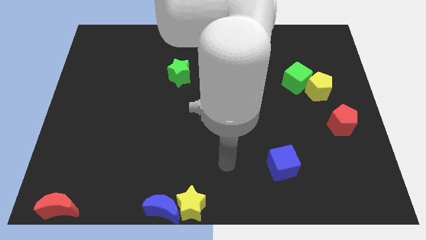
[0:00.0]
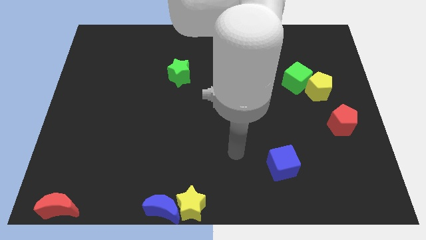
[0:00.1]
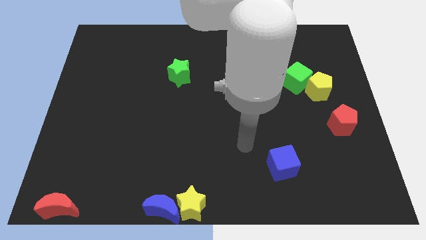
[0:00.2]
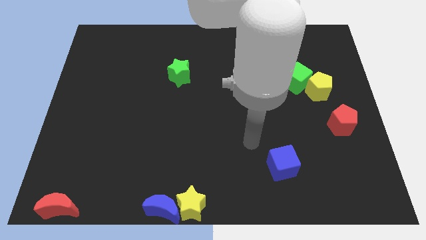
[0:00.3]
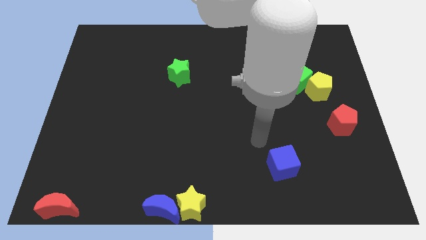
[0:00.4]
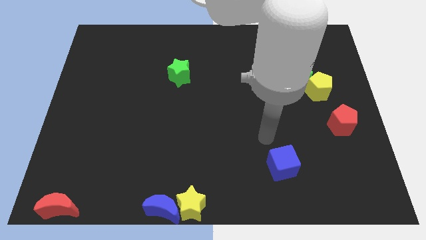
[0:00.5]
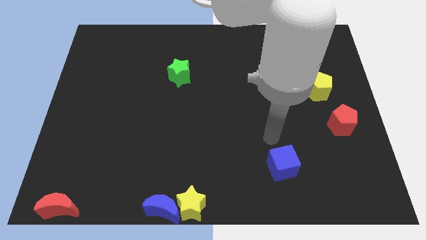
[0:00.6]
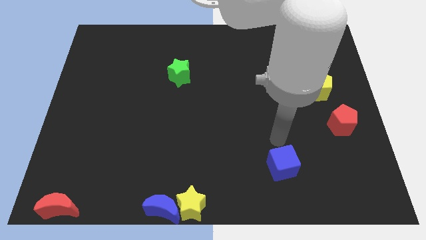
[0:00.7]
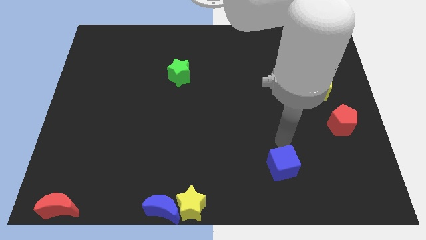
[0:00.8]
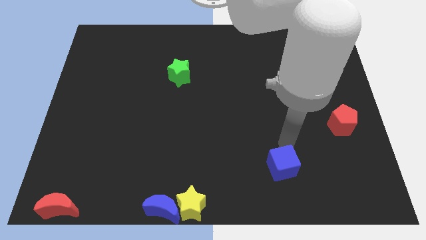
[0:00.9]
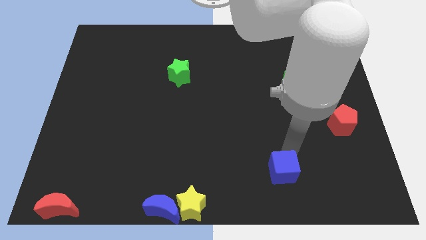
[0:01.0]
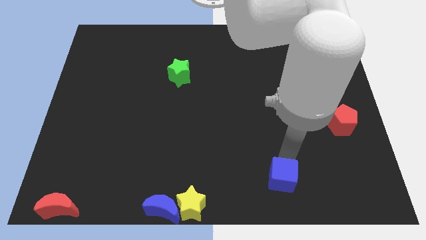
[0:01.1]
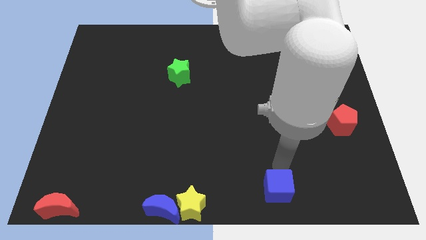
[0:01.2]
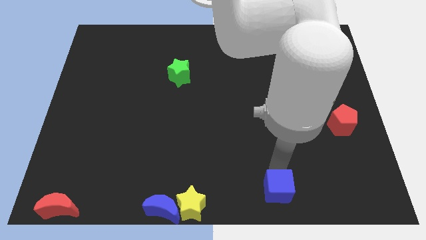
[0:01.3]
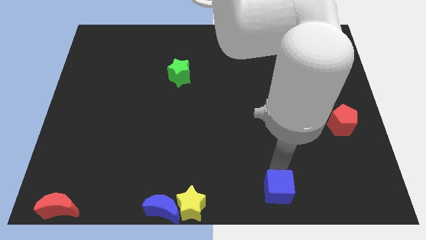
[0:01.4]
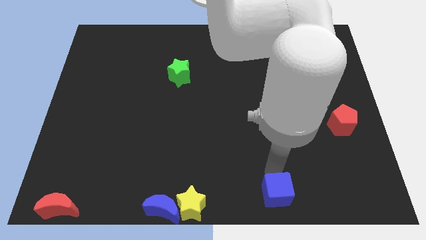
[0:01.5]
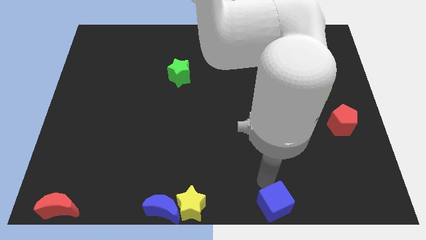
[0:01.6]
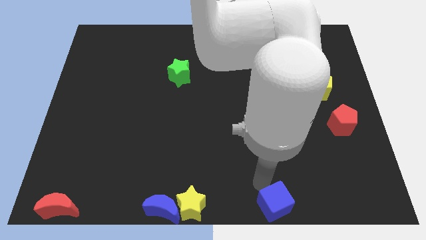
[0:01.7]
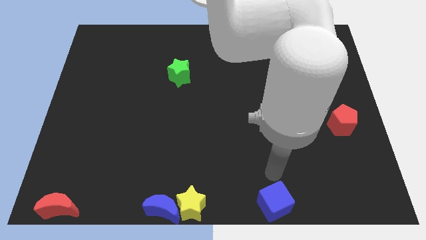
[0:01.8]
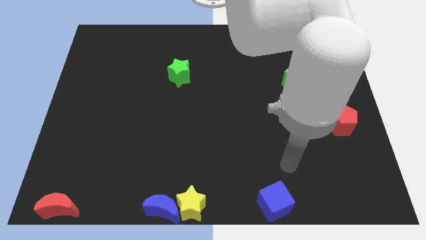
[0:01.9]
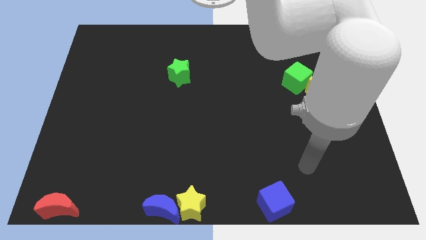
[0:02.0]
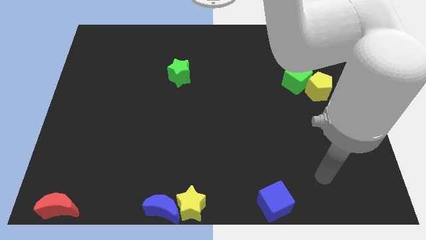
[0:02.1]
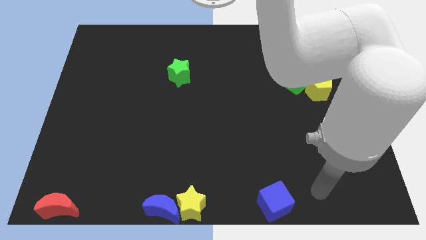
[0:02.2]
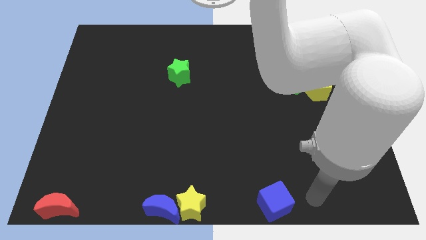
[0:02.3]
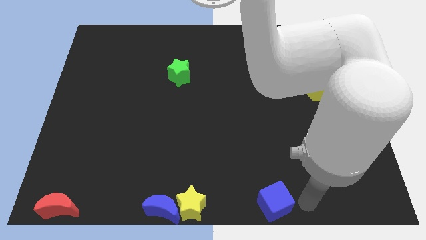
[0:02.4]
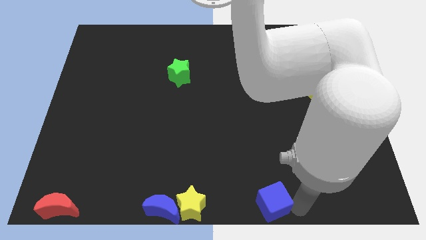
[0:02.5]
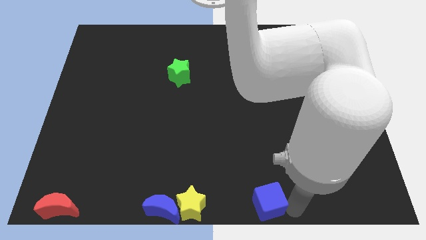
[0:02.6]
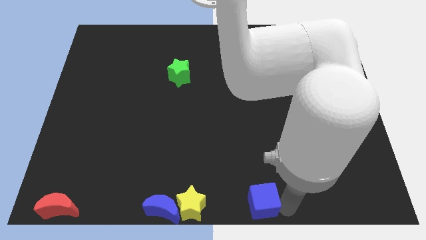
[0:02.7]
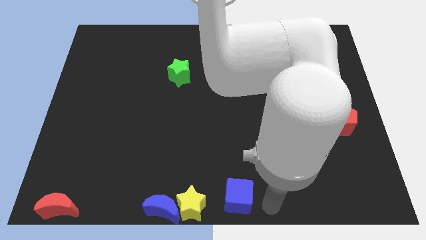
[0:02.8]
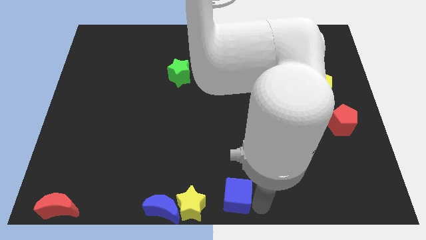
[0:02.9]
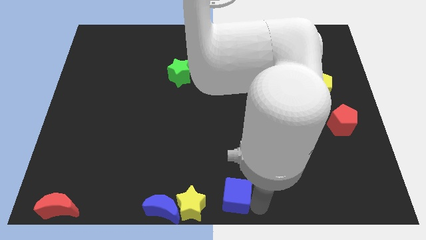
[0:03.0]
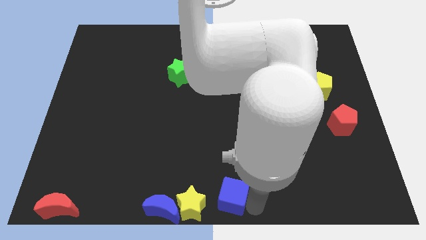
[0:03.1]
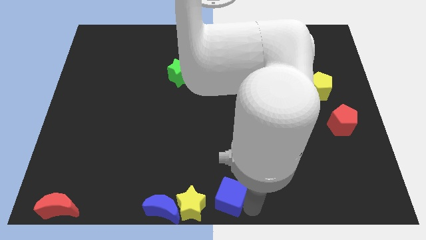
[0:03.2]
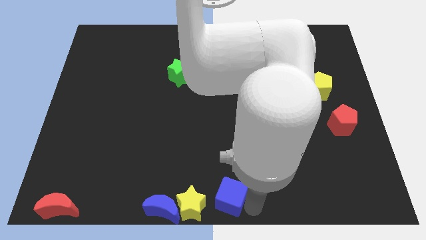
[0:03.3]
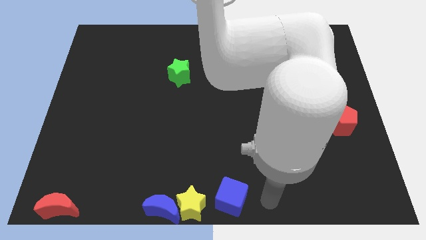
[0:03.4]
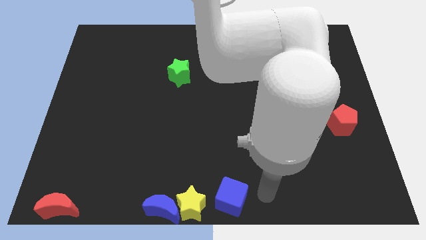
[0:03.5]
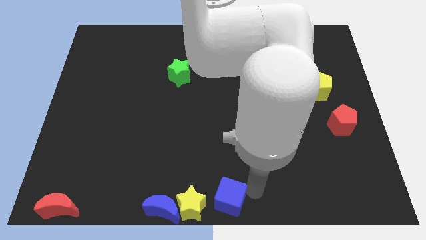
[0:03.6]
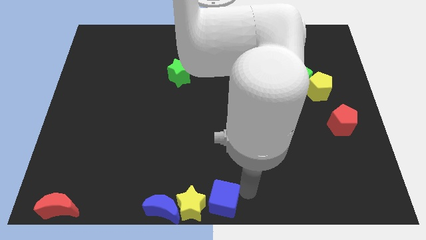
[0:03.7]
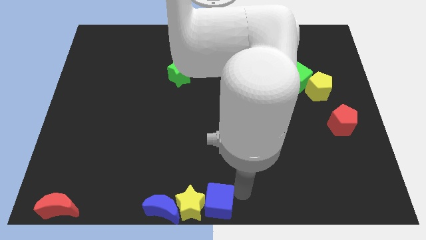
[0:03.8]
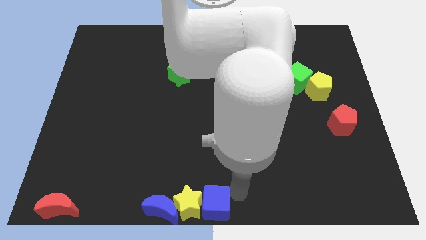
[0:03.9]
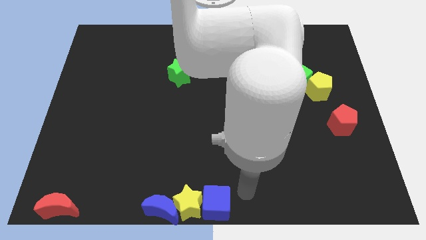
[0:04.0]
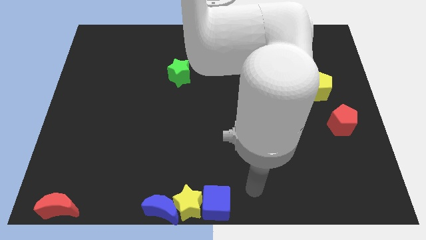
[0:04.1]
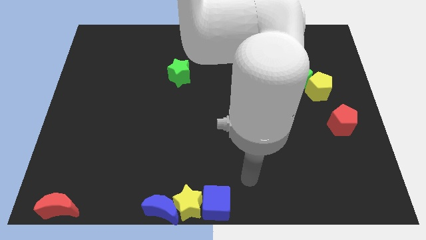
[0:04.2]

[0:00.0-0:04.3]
push the blue cube to the right side of the yellow star

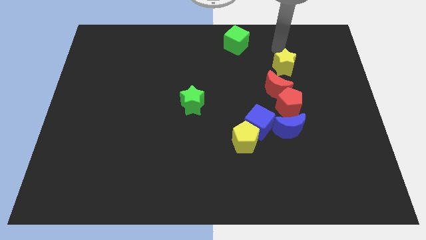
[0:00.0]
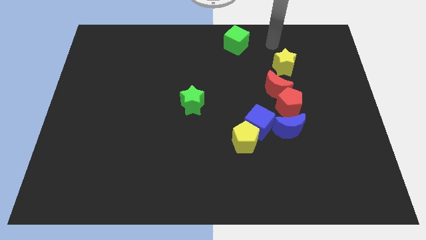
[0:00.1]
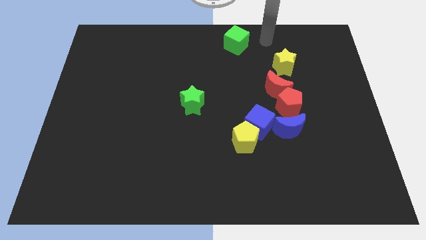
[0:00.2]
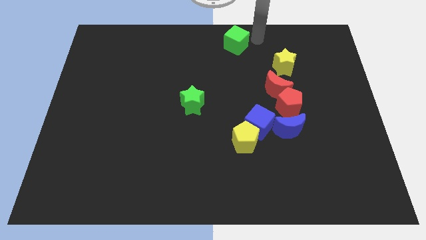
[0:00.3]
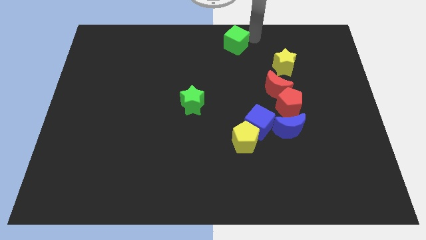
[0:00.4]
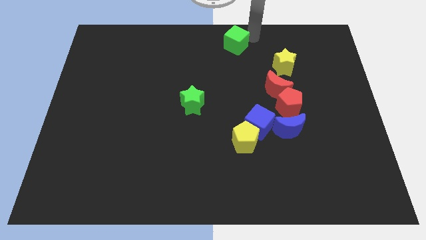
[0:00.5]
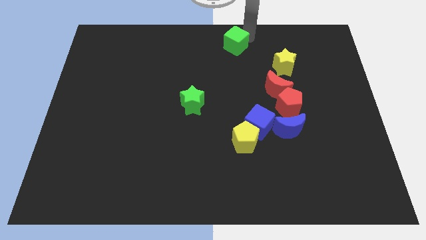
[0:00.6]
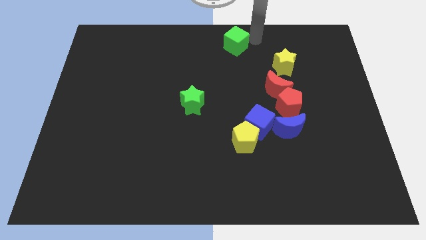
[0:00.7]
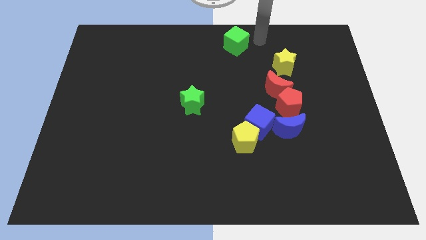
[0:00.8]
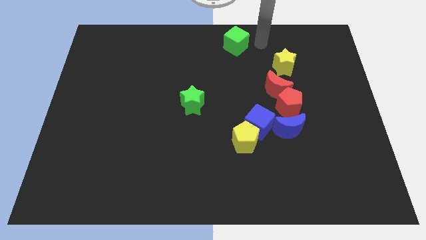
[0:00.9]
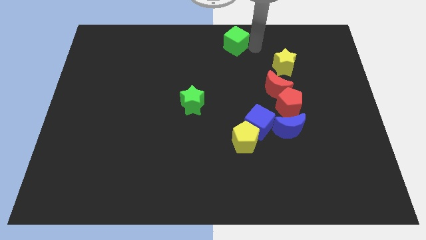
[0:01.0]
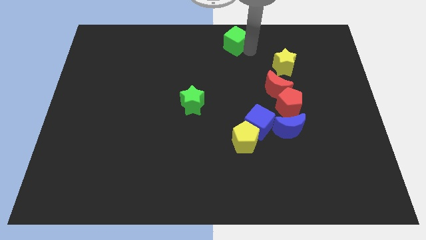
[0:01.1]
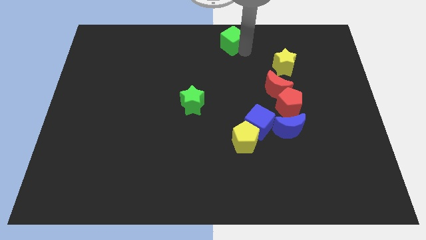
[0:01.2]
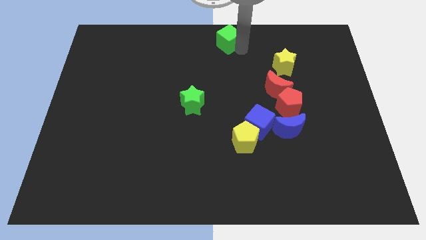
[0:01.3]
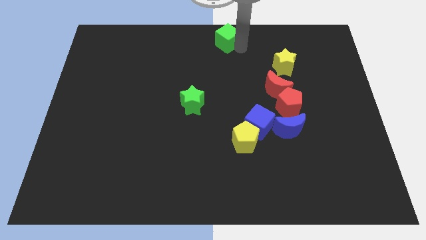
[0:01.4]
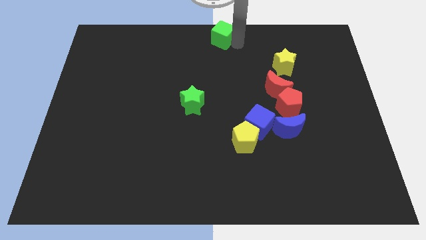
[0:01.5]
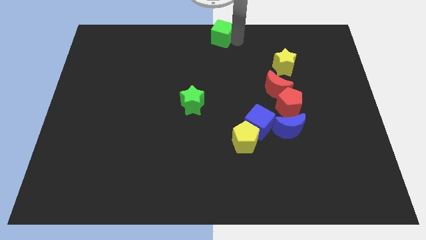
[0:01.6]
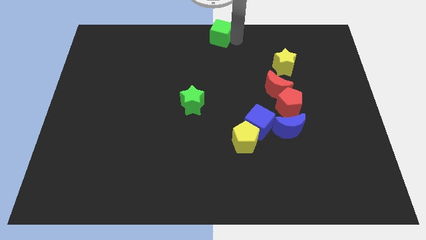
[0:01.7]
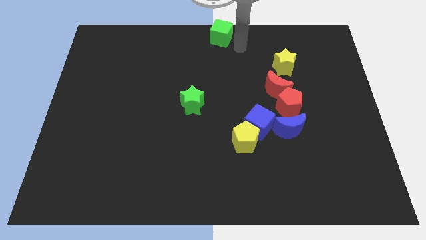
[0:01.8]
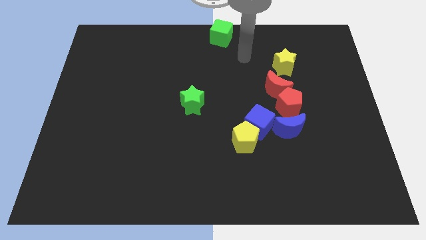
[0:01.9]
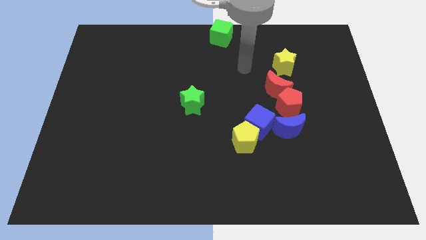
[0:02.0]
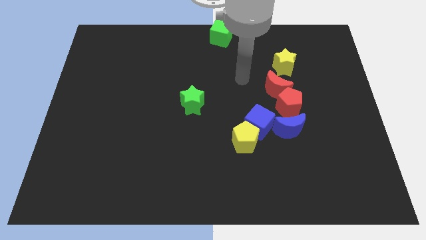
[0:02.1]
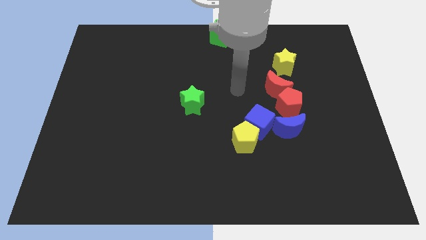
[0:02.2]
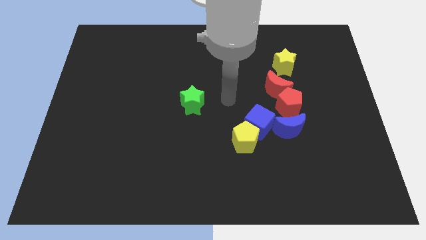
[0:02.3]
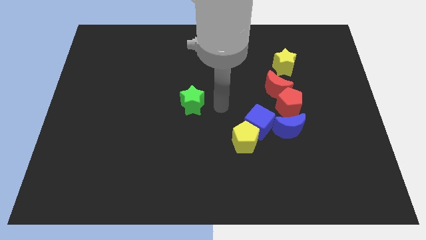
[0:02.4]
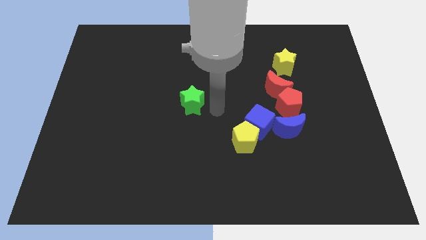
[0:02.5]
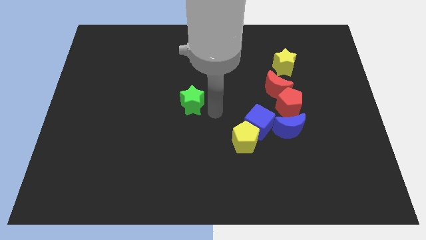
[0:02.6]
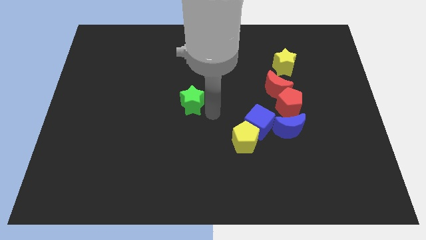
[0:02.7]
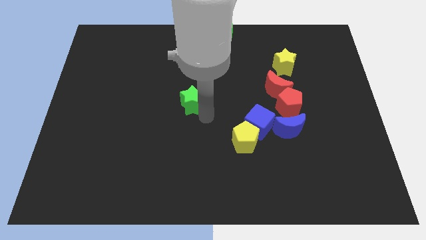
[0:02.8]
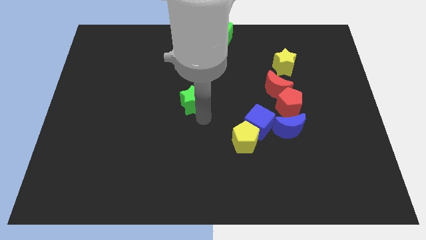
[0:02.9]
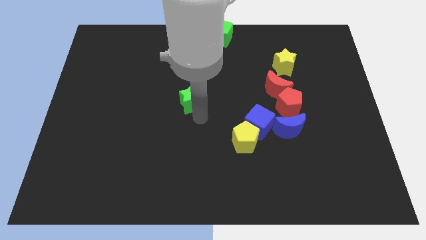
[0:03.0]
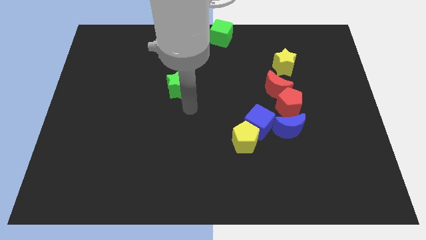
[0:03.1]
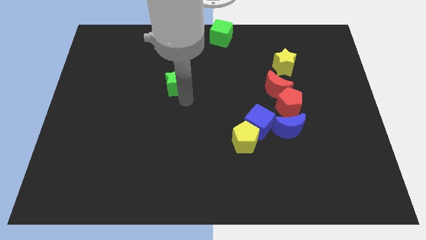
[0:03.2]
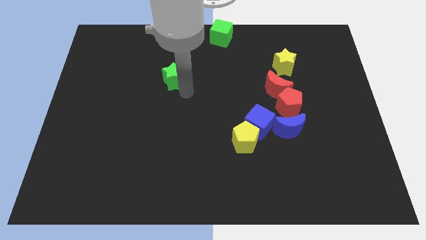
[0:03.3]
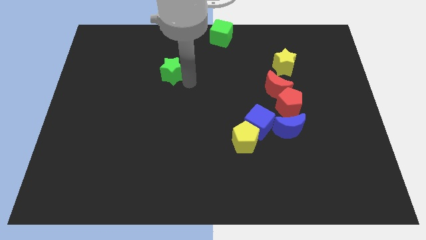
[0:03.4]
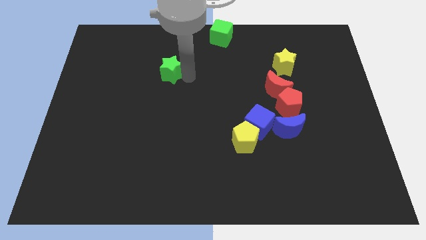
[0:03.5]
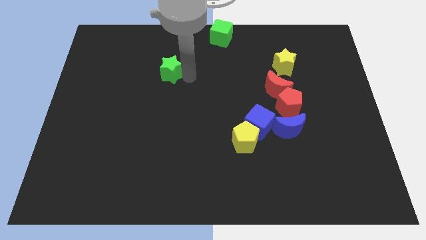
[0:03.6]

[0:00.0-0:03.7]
push the green star towards top

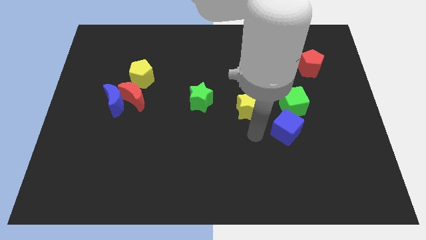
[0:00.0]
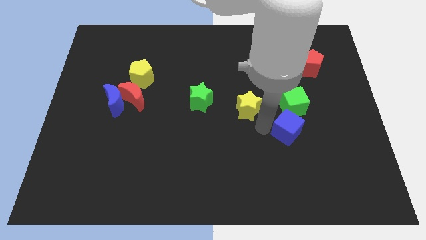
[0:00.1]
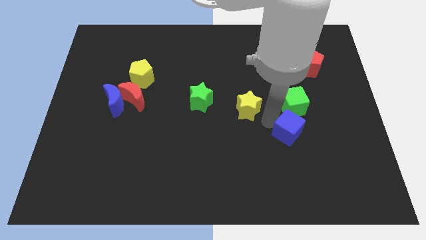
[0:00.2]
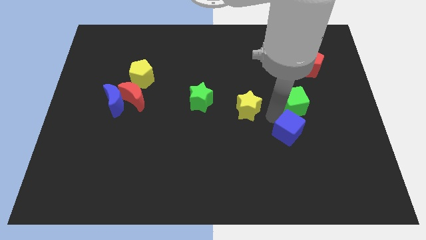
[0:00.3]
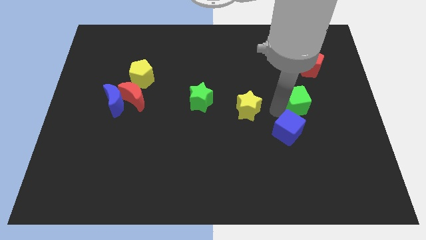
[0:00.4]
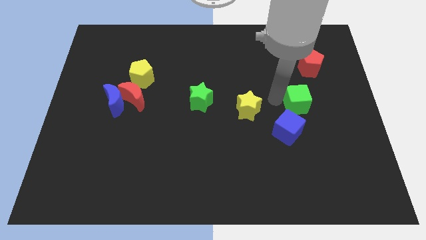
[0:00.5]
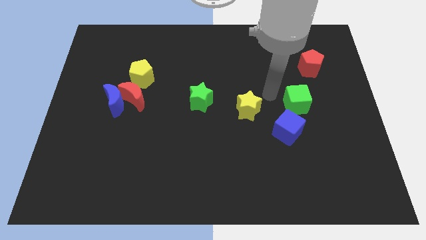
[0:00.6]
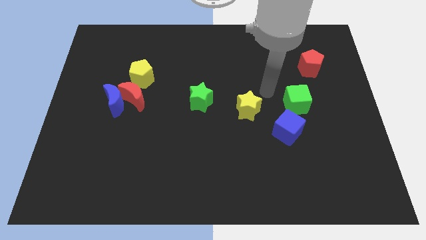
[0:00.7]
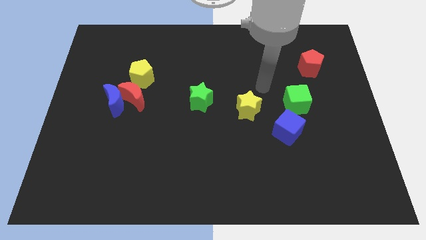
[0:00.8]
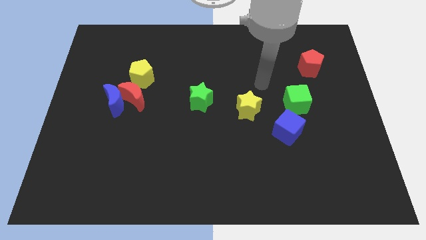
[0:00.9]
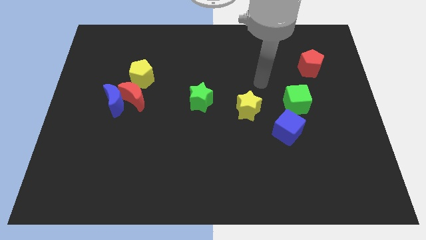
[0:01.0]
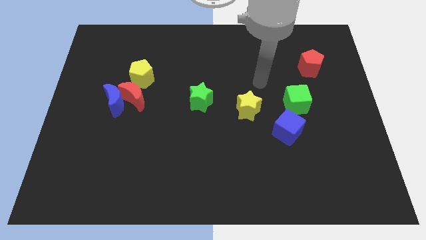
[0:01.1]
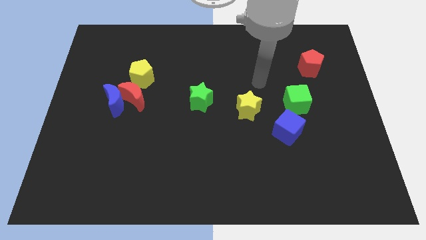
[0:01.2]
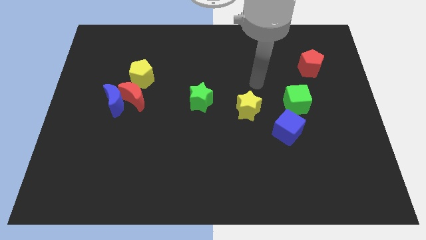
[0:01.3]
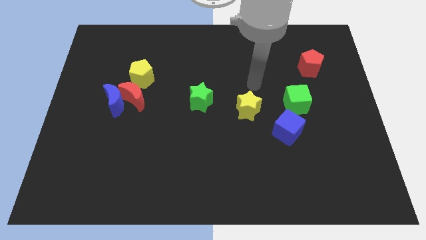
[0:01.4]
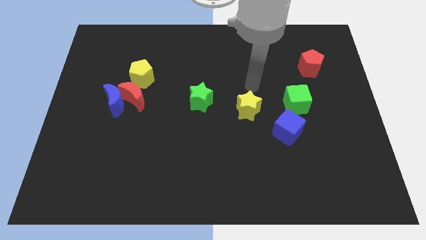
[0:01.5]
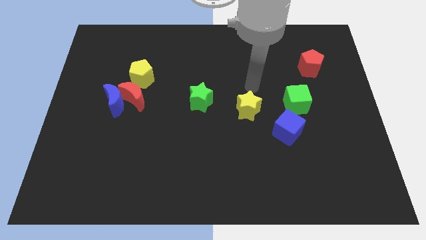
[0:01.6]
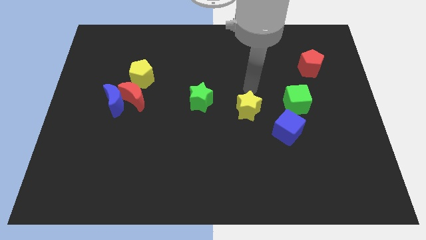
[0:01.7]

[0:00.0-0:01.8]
slightly move the green cube to right
